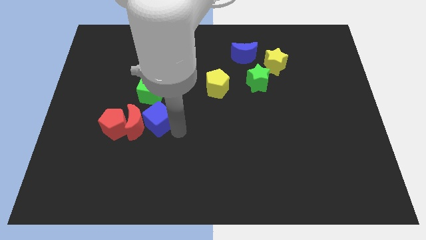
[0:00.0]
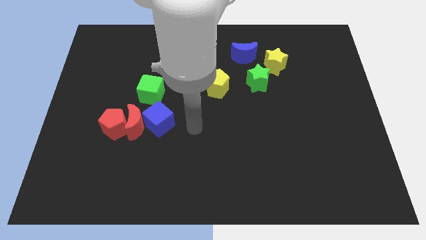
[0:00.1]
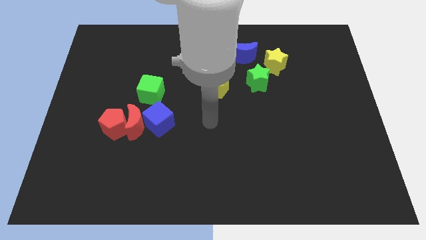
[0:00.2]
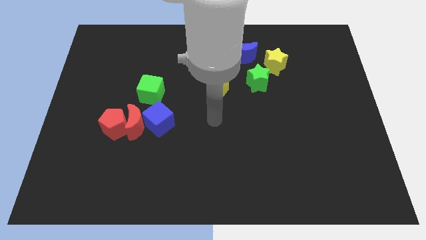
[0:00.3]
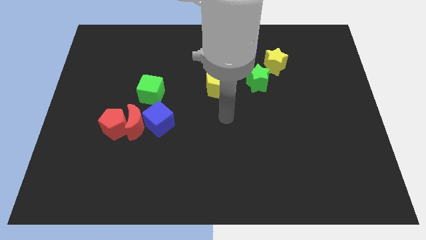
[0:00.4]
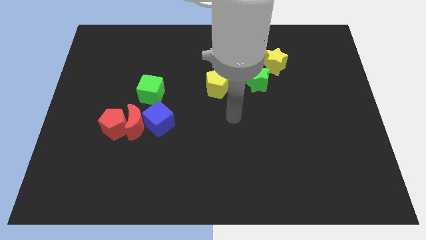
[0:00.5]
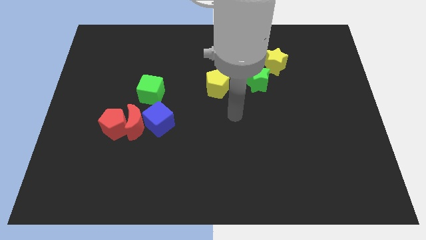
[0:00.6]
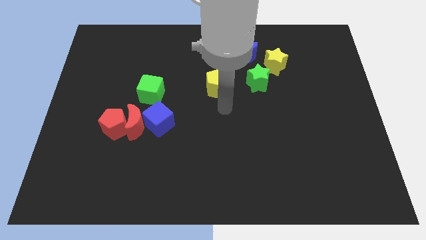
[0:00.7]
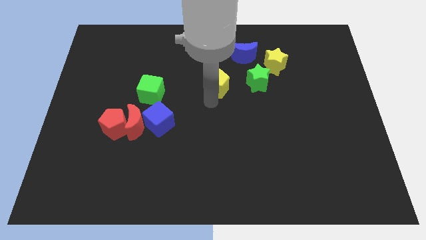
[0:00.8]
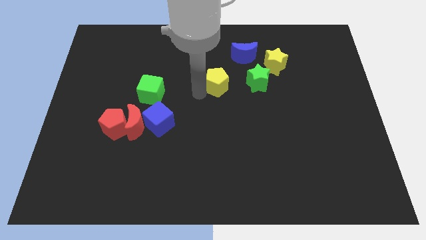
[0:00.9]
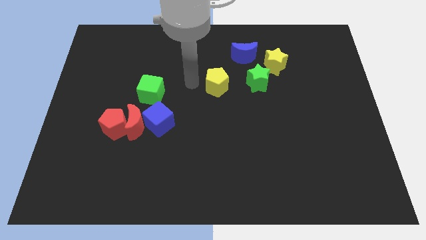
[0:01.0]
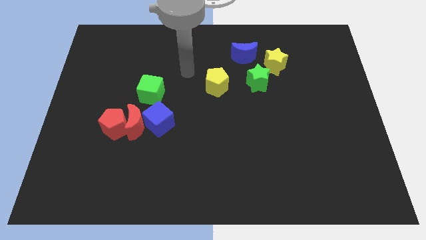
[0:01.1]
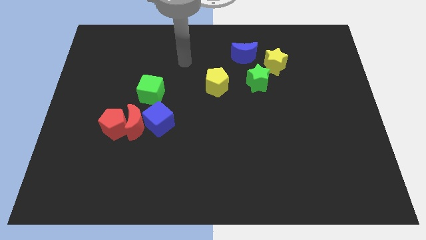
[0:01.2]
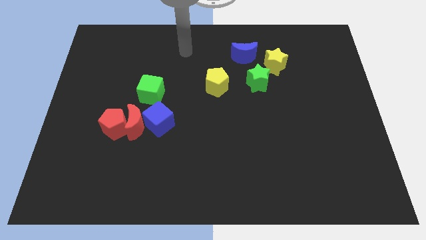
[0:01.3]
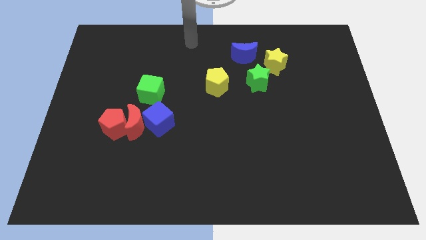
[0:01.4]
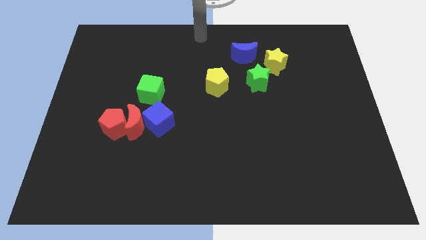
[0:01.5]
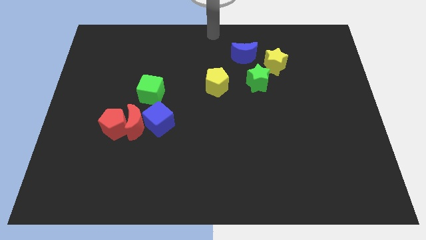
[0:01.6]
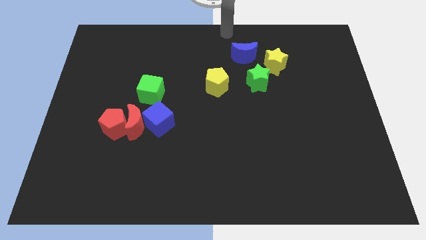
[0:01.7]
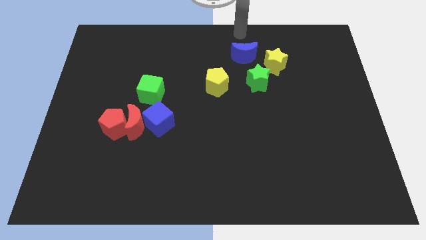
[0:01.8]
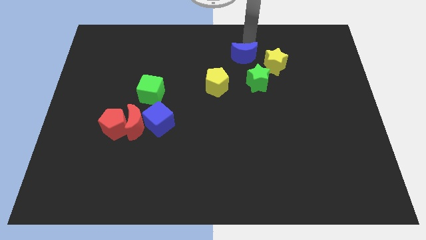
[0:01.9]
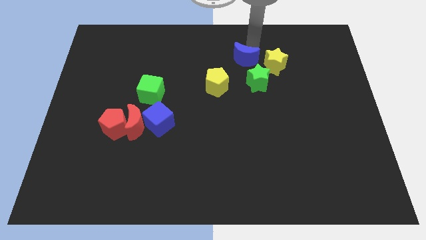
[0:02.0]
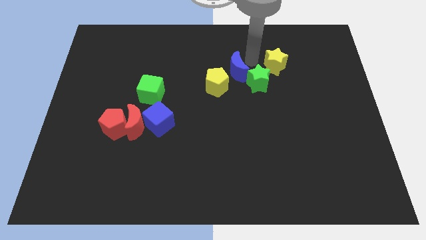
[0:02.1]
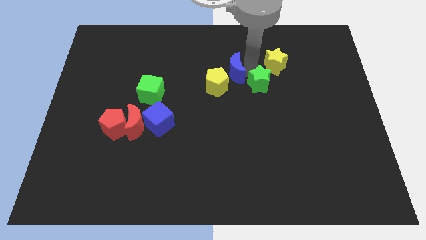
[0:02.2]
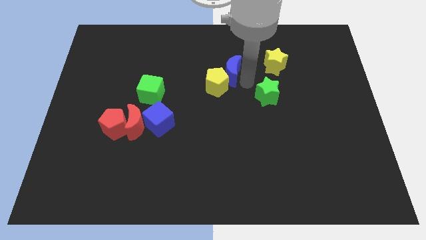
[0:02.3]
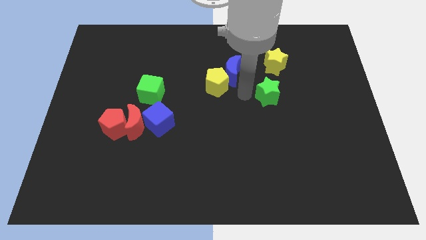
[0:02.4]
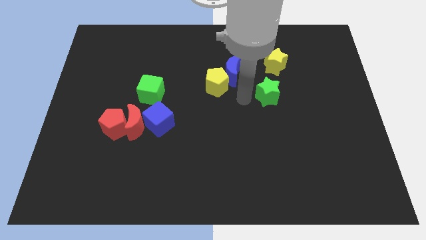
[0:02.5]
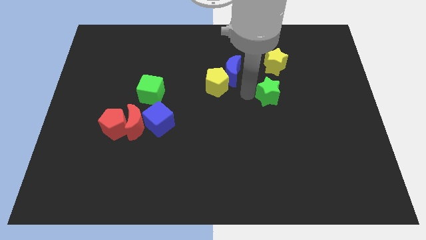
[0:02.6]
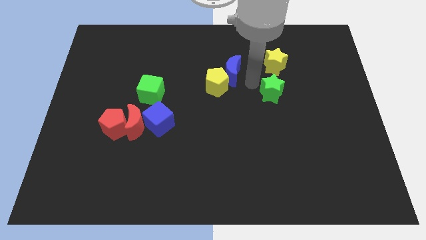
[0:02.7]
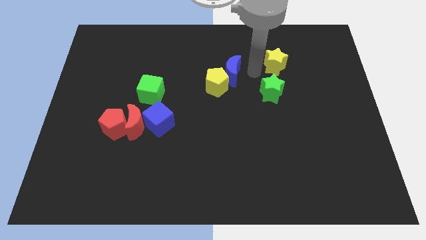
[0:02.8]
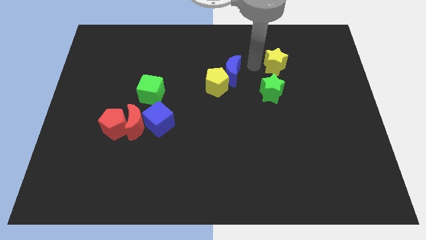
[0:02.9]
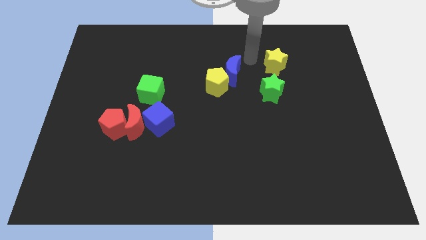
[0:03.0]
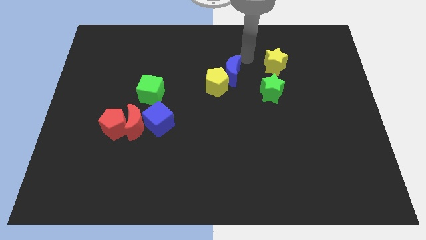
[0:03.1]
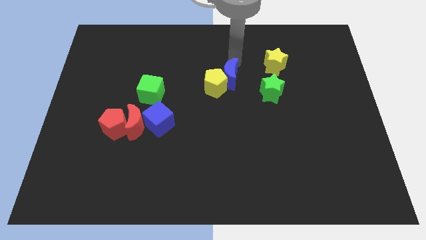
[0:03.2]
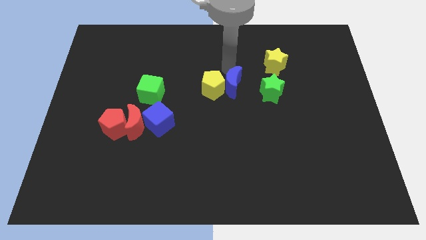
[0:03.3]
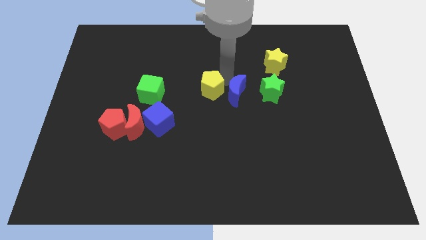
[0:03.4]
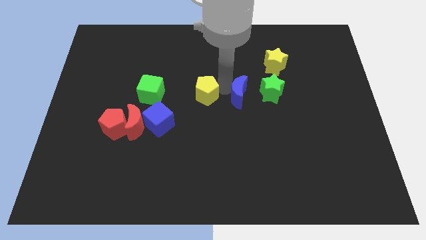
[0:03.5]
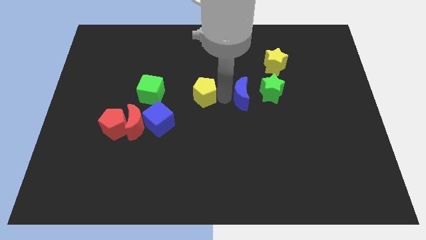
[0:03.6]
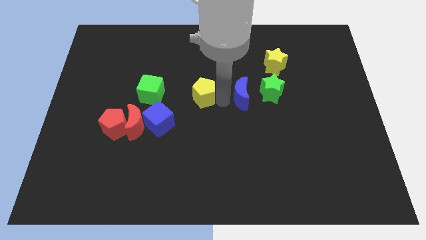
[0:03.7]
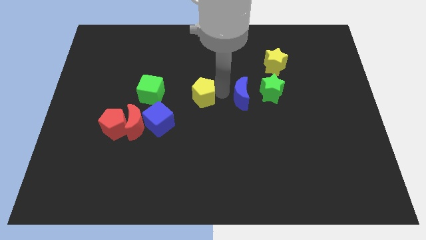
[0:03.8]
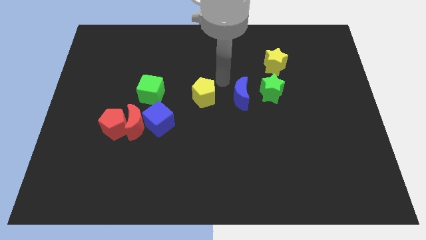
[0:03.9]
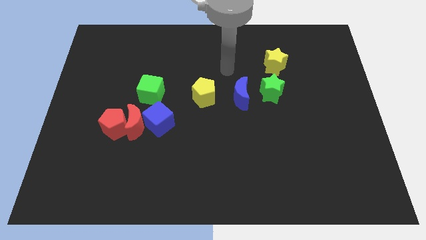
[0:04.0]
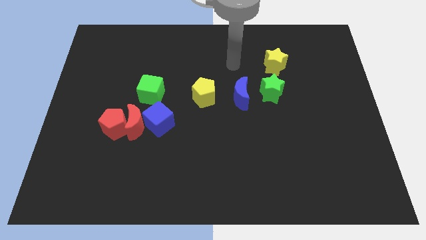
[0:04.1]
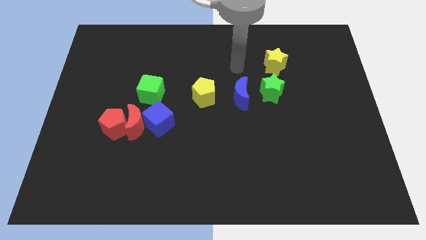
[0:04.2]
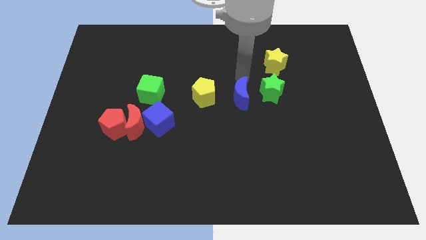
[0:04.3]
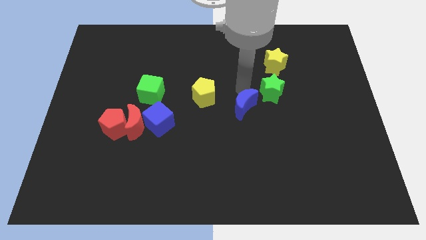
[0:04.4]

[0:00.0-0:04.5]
push the blue crescent to the left of the green star

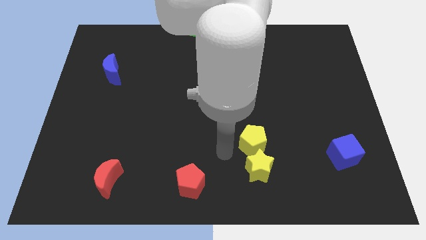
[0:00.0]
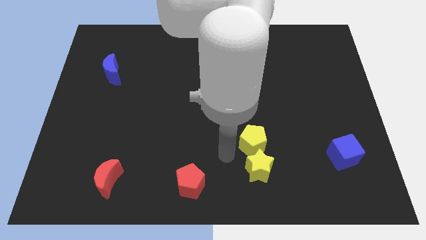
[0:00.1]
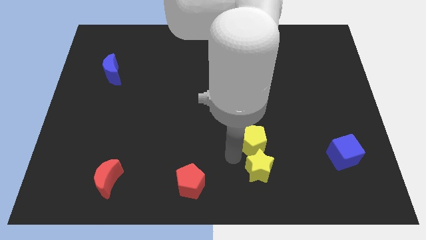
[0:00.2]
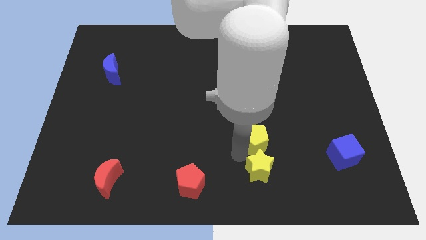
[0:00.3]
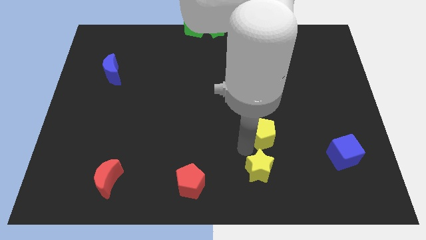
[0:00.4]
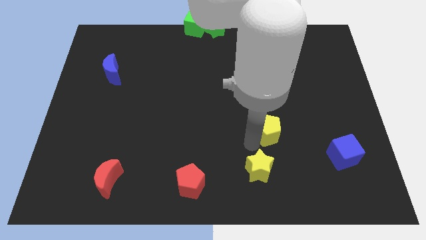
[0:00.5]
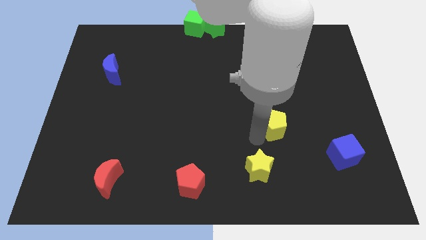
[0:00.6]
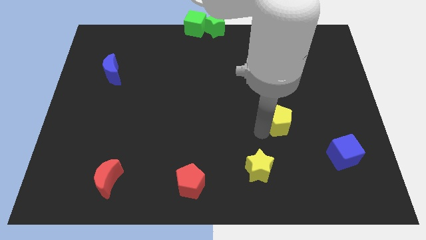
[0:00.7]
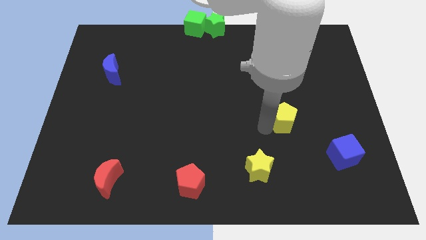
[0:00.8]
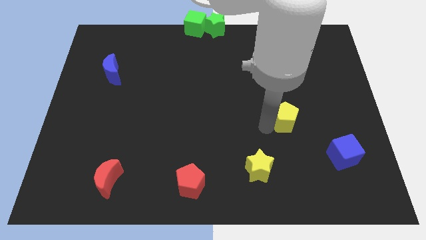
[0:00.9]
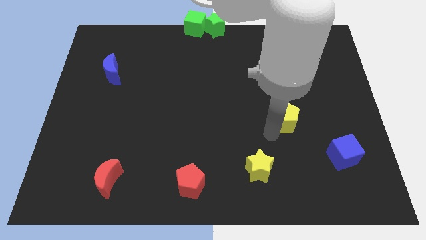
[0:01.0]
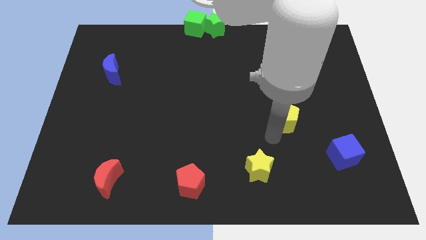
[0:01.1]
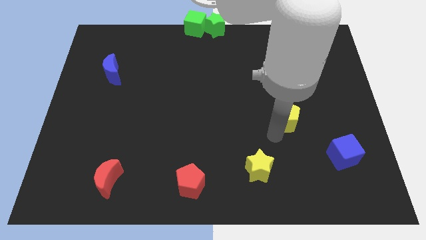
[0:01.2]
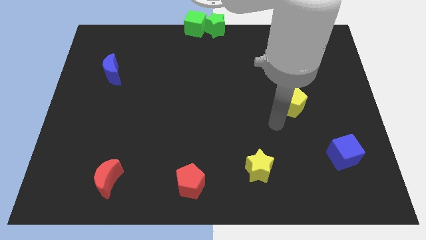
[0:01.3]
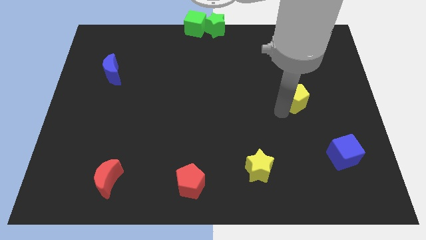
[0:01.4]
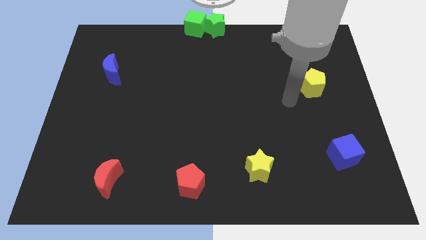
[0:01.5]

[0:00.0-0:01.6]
separate the yellow pentagon from the top side of the yellow star

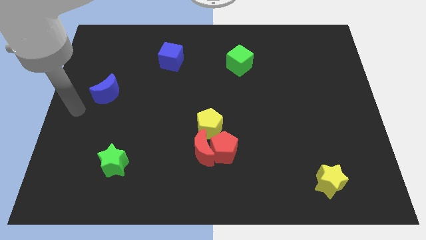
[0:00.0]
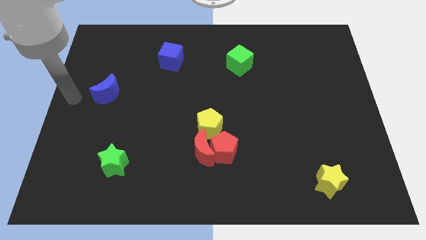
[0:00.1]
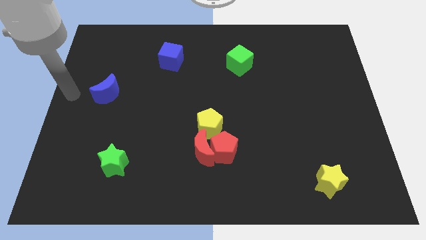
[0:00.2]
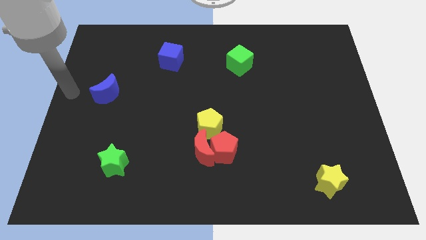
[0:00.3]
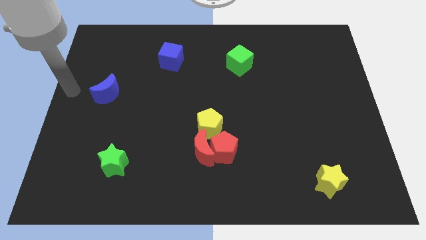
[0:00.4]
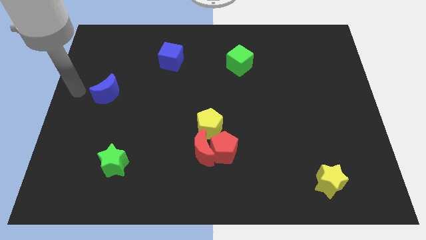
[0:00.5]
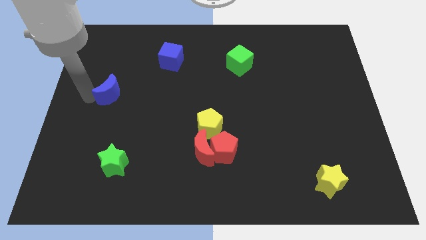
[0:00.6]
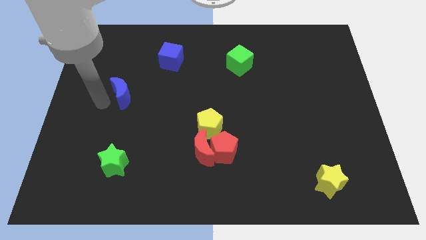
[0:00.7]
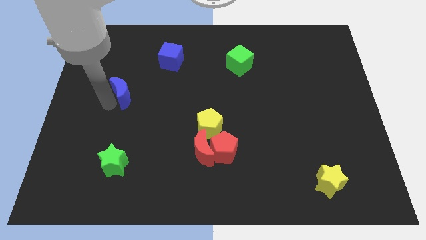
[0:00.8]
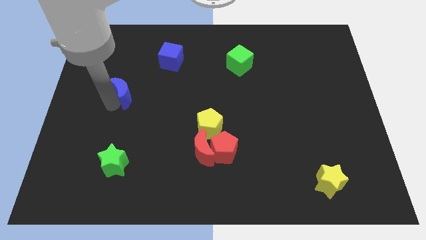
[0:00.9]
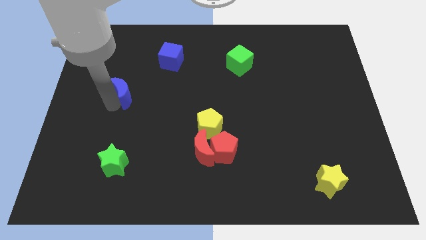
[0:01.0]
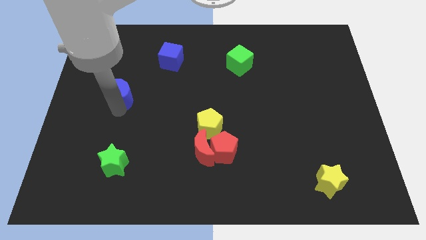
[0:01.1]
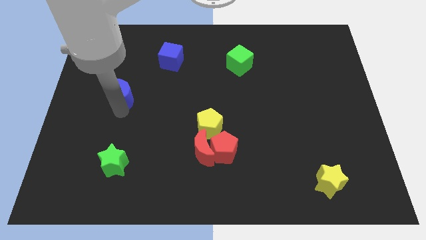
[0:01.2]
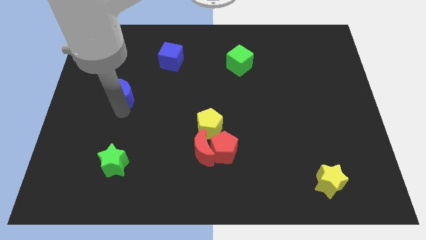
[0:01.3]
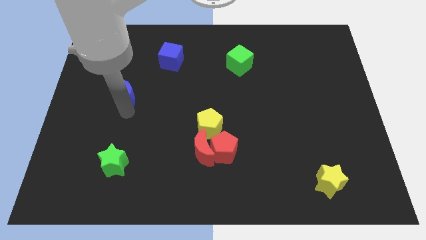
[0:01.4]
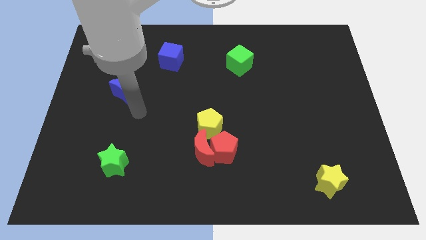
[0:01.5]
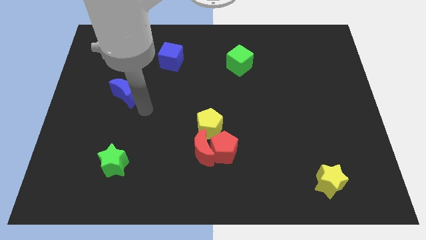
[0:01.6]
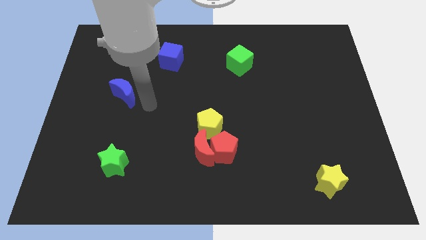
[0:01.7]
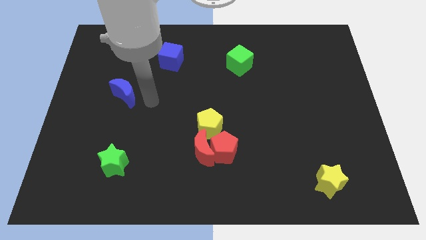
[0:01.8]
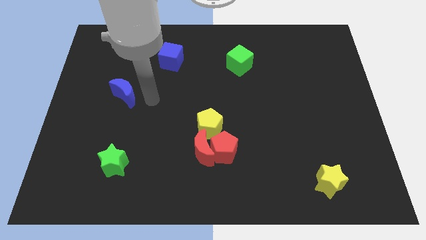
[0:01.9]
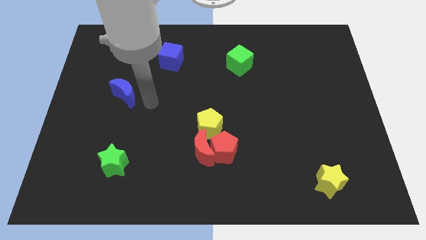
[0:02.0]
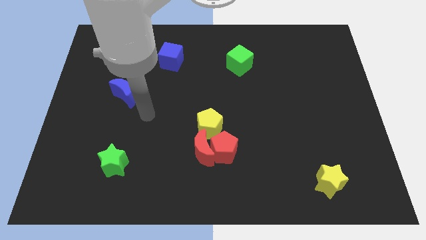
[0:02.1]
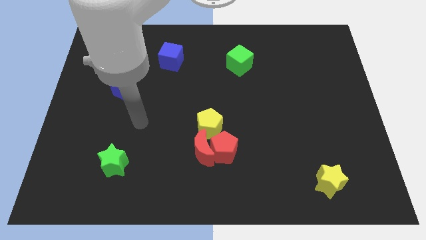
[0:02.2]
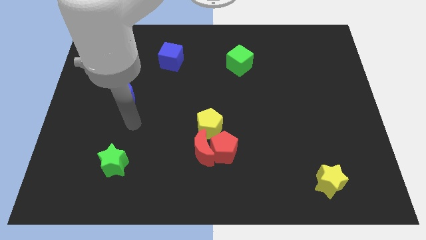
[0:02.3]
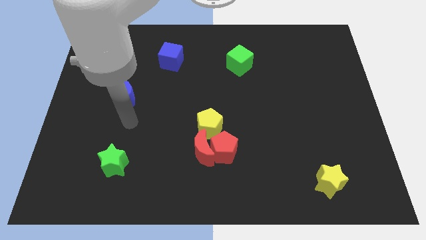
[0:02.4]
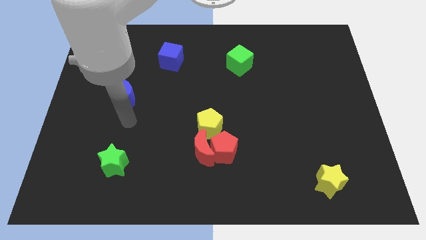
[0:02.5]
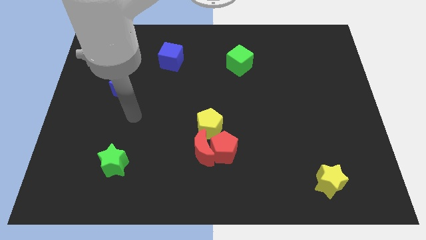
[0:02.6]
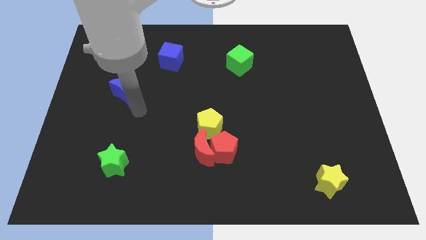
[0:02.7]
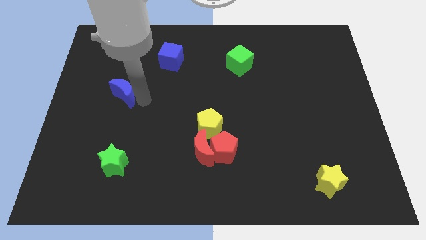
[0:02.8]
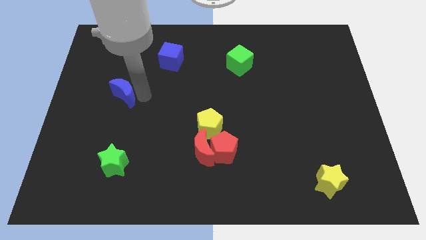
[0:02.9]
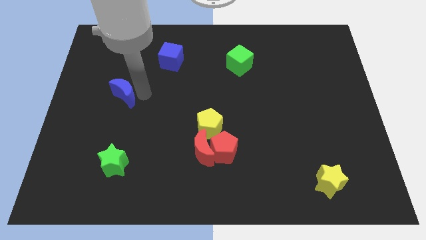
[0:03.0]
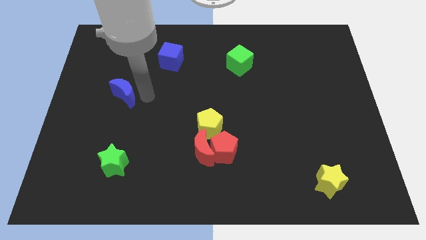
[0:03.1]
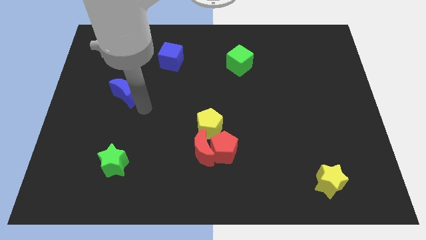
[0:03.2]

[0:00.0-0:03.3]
move blue crescent slightly towards the right side
